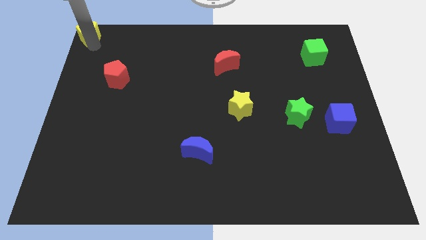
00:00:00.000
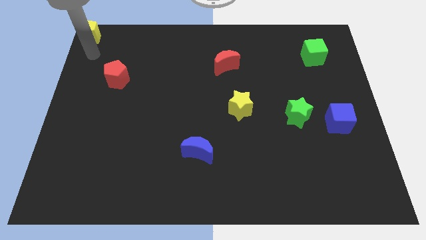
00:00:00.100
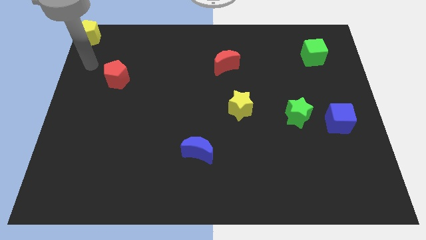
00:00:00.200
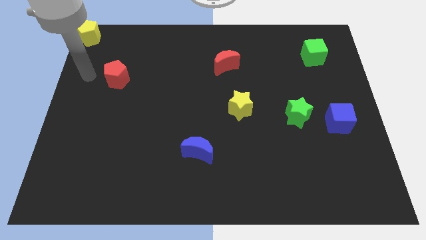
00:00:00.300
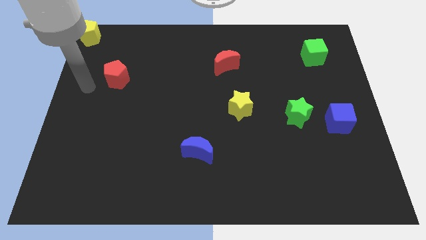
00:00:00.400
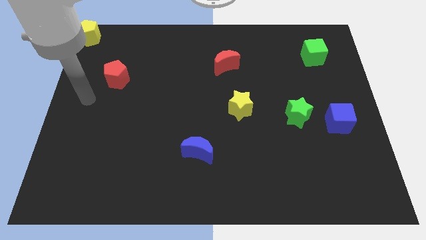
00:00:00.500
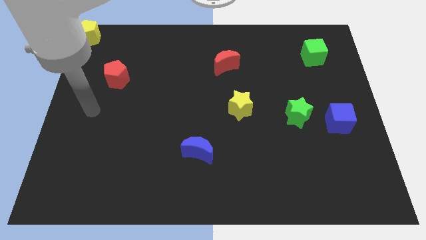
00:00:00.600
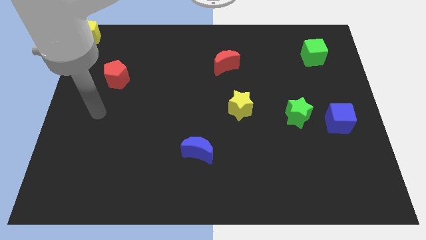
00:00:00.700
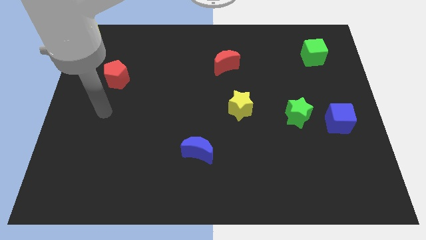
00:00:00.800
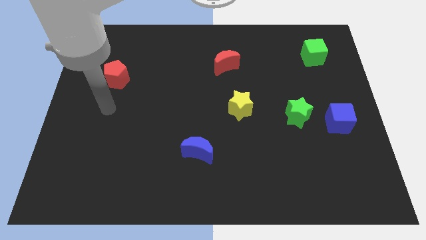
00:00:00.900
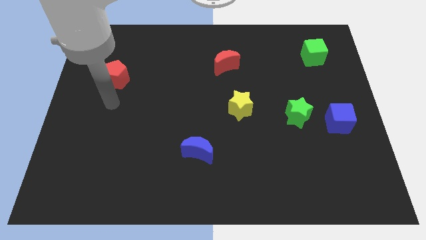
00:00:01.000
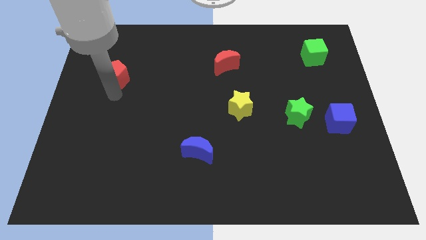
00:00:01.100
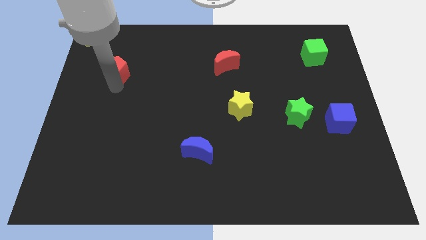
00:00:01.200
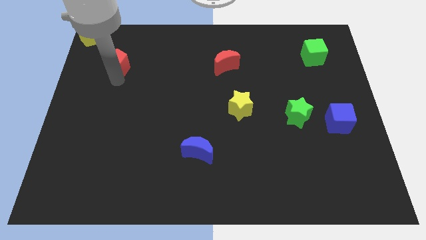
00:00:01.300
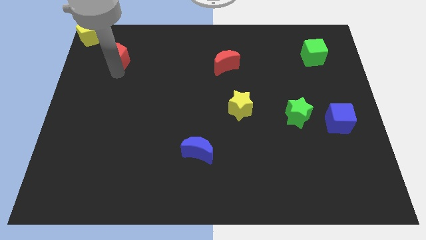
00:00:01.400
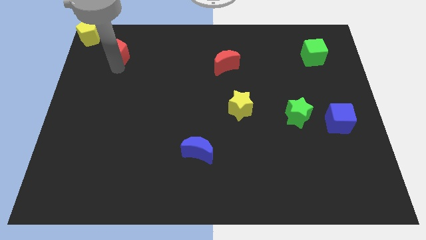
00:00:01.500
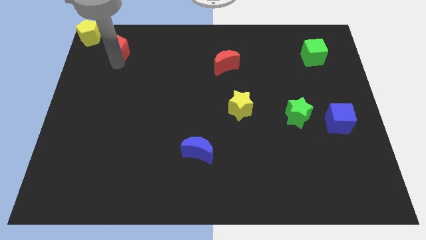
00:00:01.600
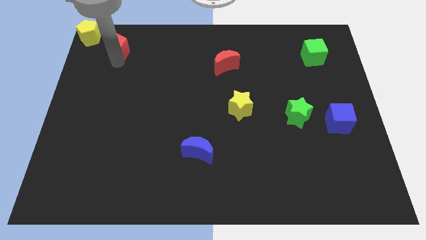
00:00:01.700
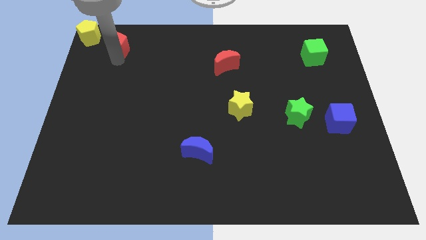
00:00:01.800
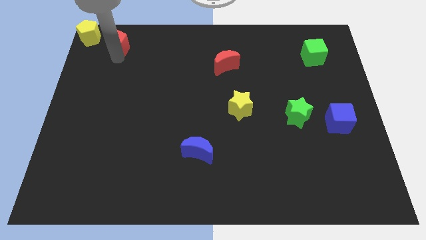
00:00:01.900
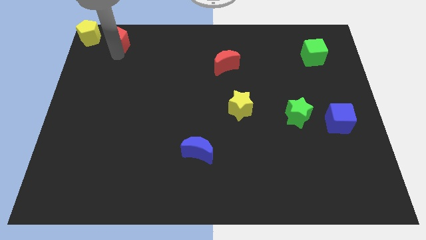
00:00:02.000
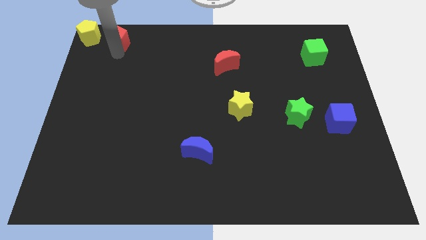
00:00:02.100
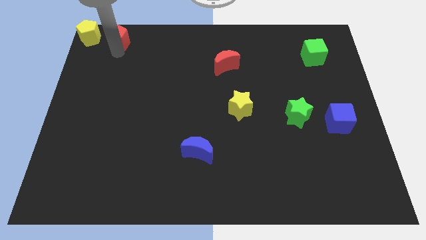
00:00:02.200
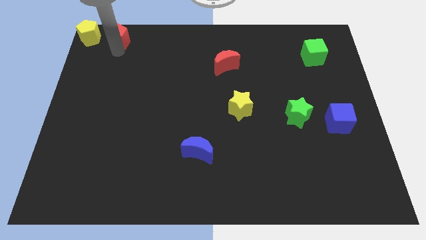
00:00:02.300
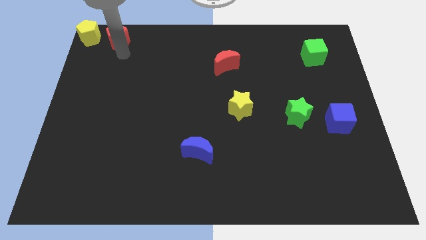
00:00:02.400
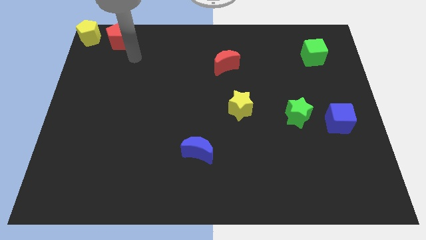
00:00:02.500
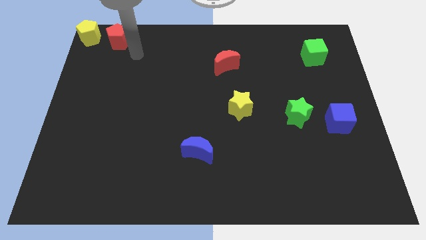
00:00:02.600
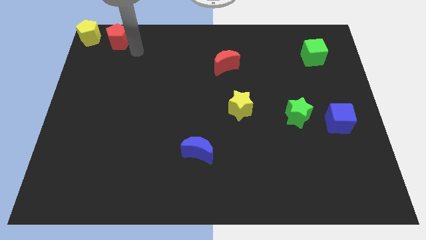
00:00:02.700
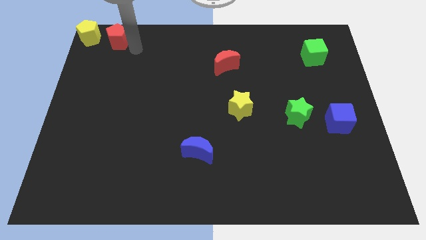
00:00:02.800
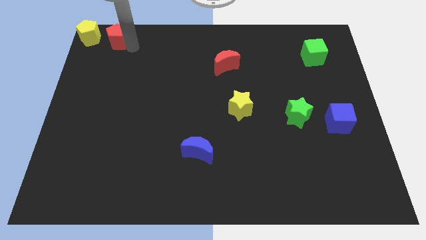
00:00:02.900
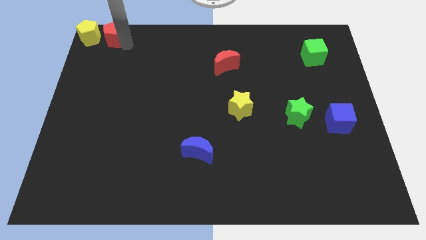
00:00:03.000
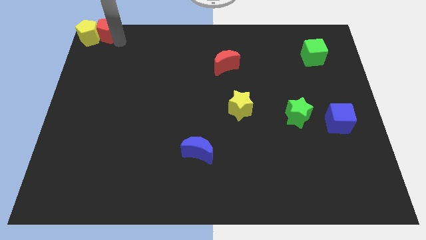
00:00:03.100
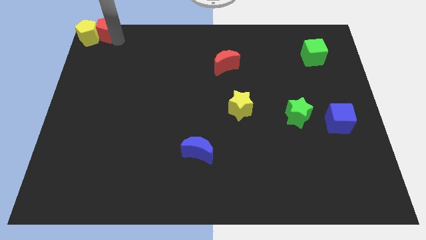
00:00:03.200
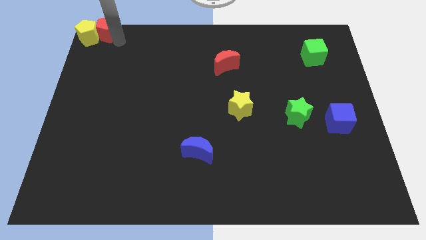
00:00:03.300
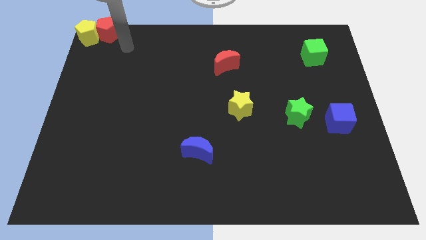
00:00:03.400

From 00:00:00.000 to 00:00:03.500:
push the red pentagon to the right of the yellow pentagon

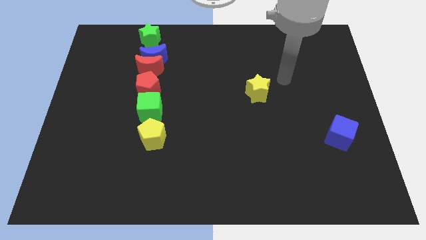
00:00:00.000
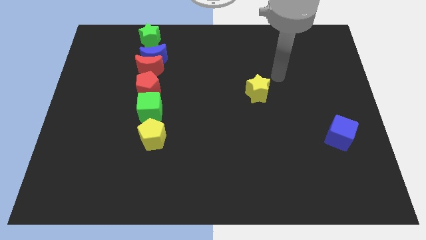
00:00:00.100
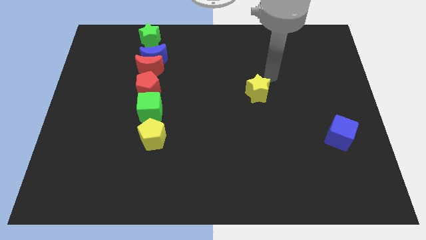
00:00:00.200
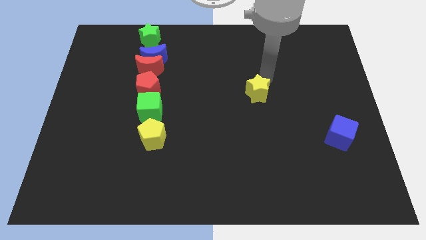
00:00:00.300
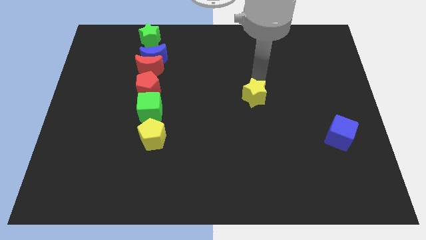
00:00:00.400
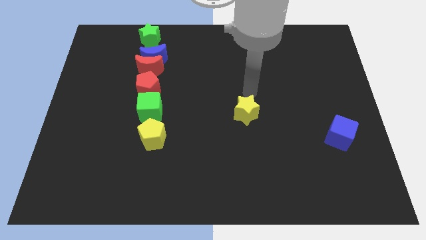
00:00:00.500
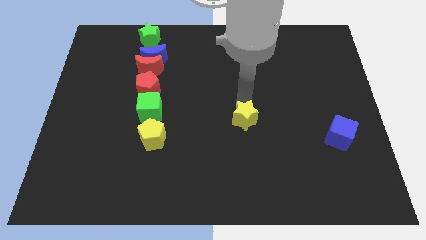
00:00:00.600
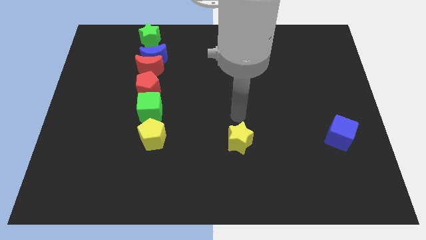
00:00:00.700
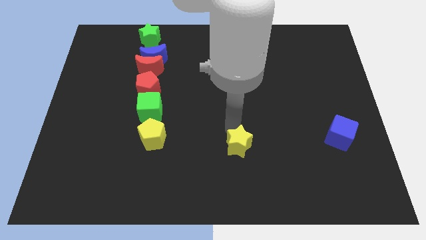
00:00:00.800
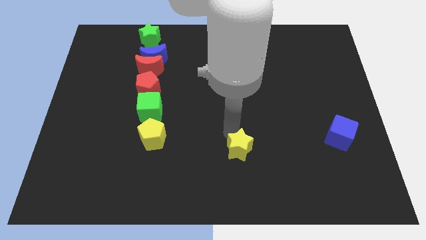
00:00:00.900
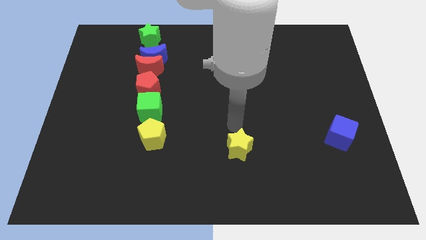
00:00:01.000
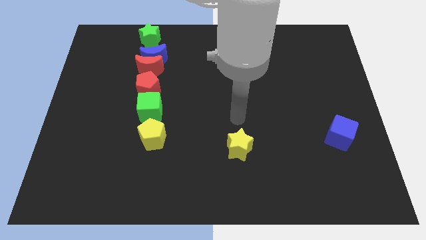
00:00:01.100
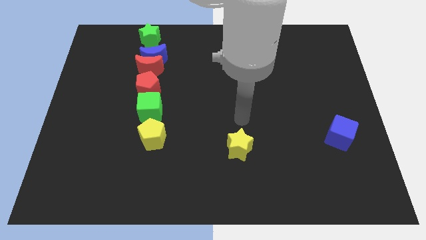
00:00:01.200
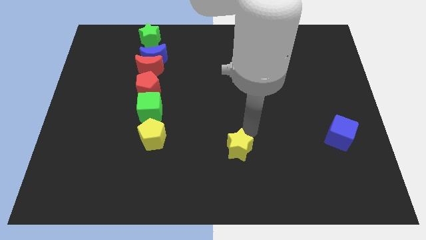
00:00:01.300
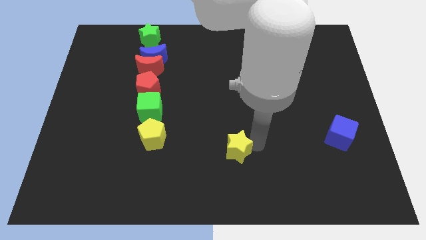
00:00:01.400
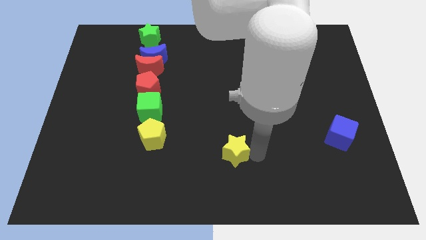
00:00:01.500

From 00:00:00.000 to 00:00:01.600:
push the yellow star towards the bottom of the board

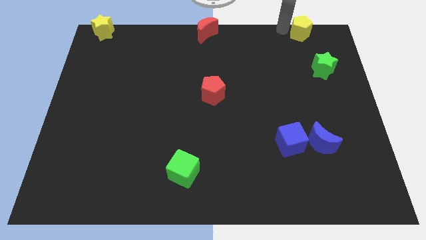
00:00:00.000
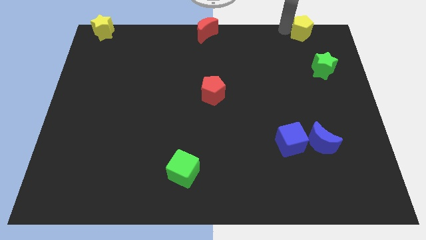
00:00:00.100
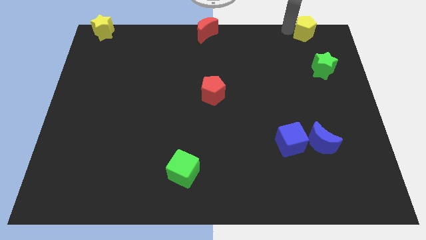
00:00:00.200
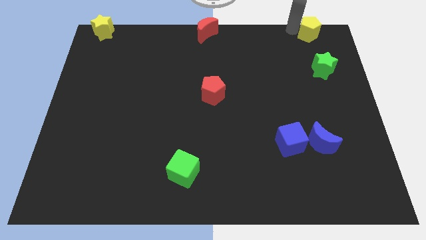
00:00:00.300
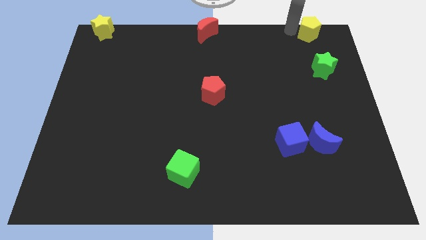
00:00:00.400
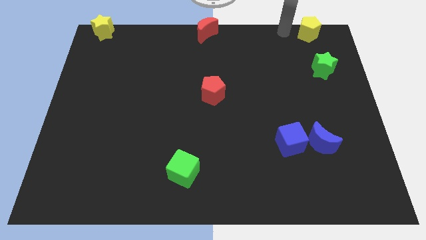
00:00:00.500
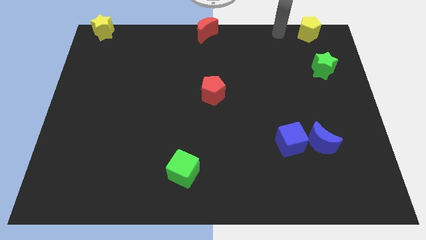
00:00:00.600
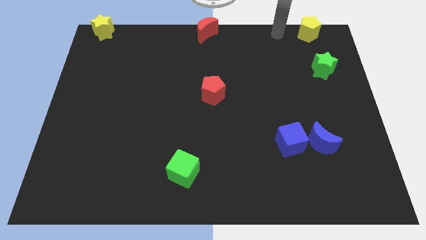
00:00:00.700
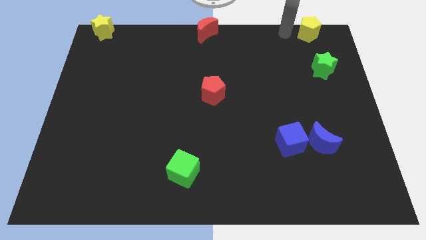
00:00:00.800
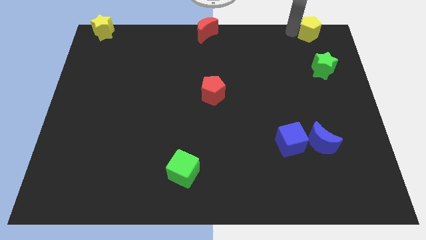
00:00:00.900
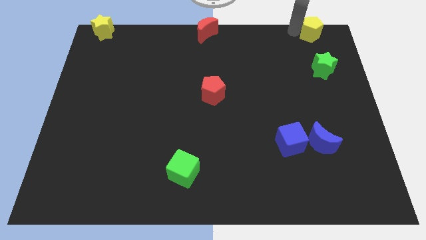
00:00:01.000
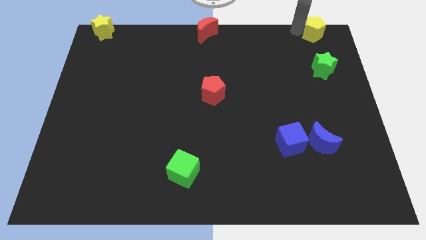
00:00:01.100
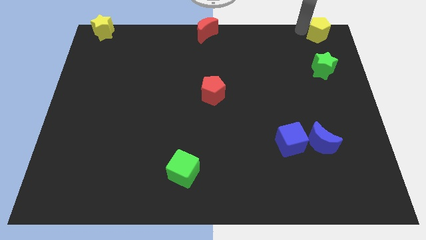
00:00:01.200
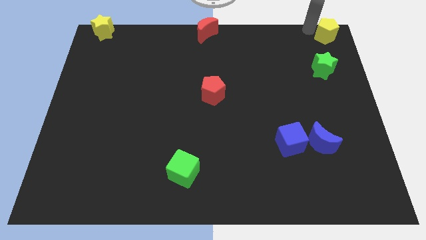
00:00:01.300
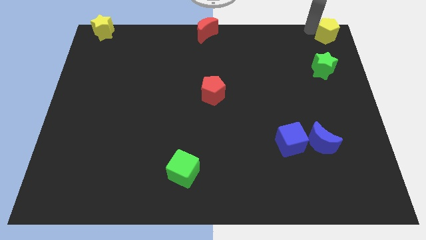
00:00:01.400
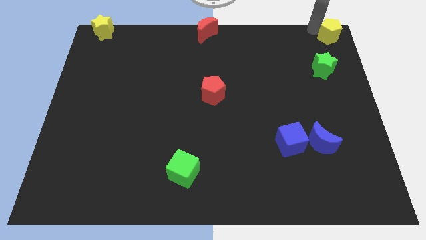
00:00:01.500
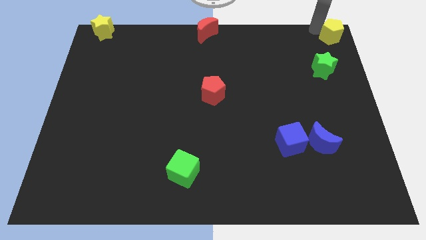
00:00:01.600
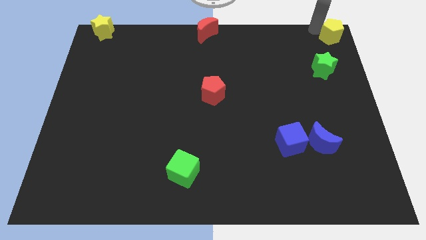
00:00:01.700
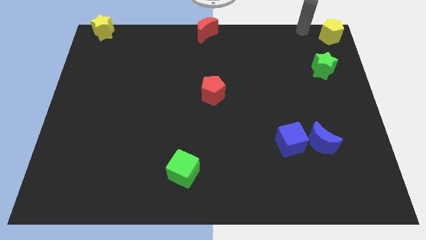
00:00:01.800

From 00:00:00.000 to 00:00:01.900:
push the yellow pentagon to top right corner

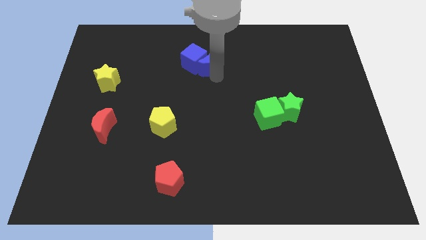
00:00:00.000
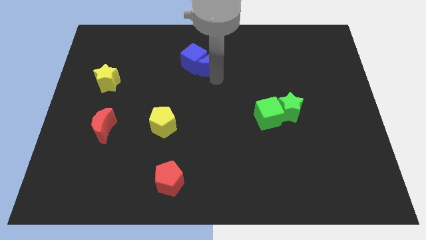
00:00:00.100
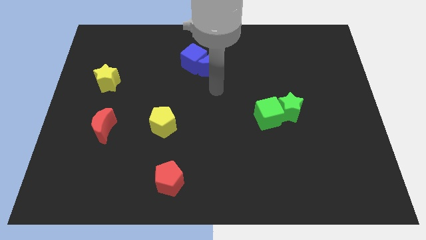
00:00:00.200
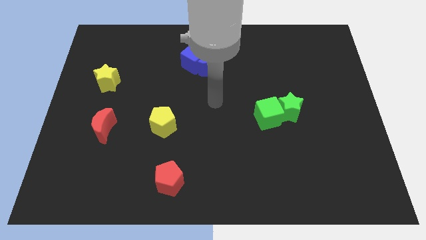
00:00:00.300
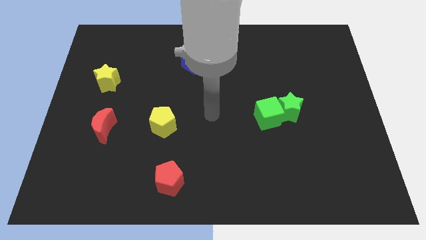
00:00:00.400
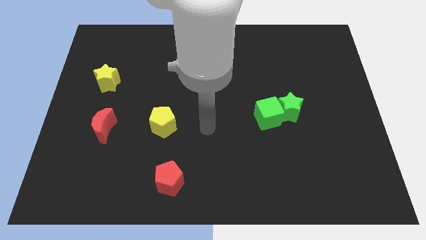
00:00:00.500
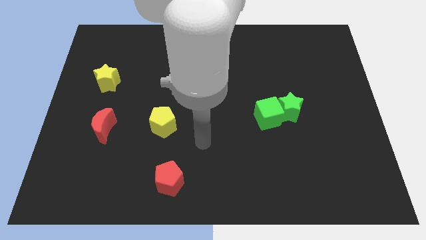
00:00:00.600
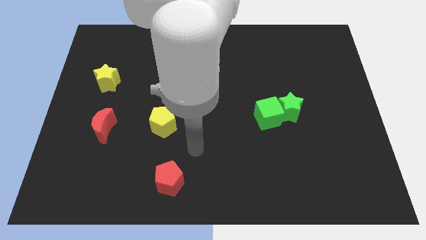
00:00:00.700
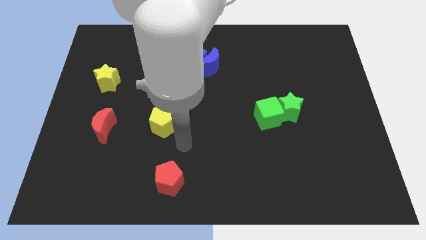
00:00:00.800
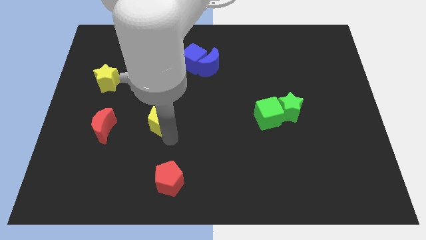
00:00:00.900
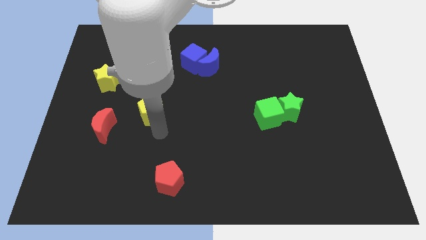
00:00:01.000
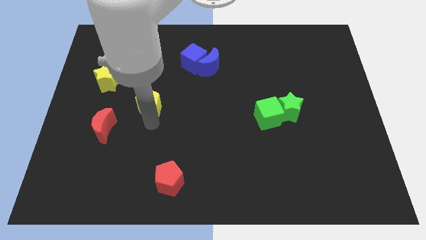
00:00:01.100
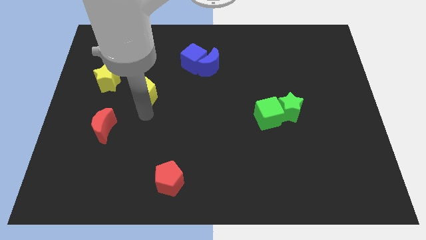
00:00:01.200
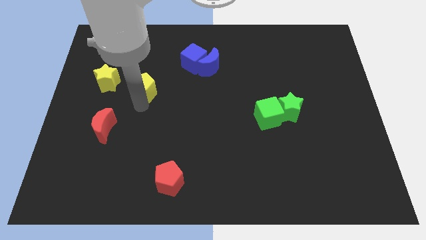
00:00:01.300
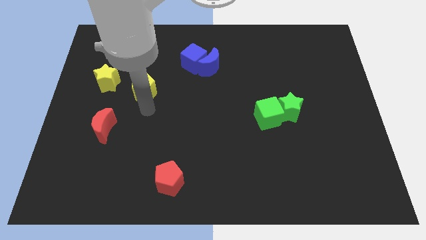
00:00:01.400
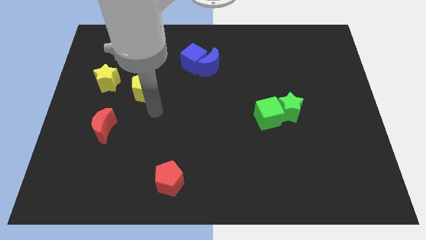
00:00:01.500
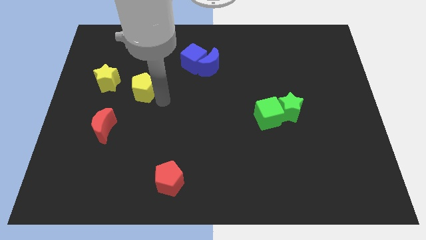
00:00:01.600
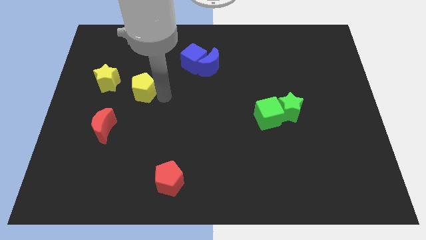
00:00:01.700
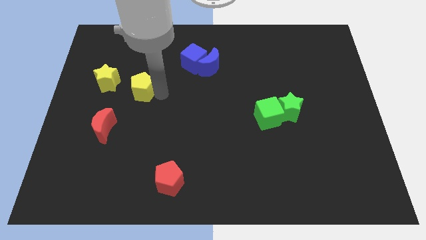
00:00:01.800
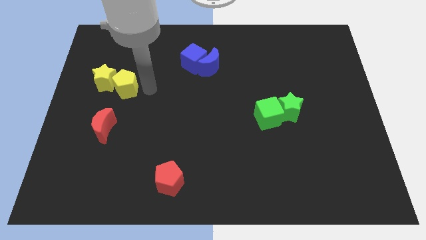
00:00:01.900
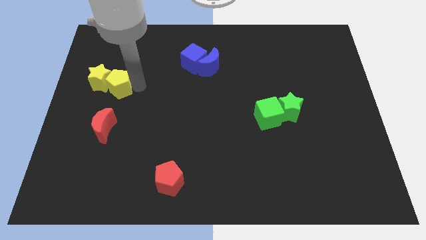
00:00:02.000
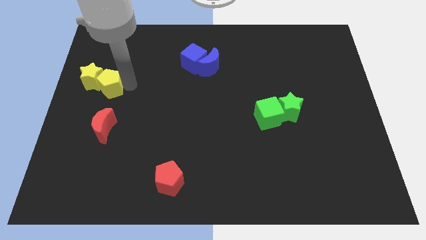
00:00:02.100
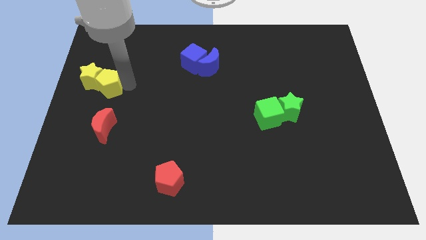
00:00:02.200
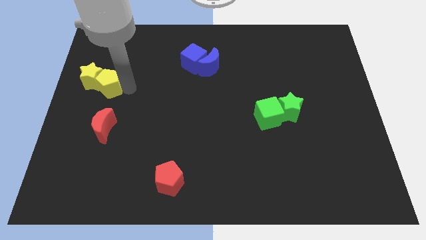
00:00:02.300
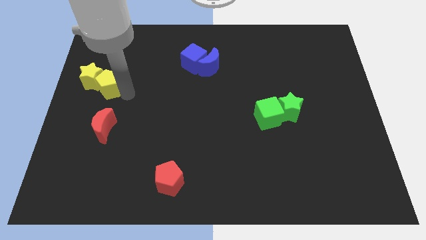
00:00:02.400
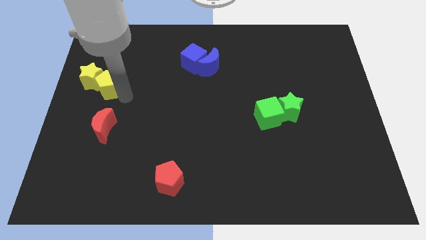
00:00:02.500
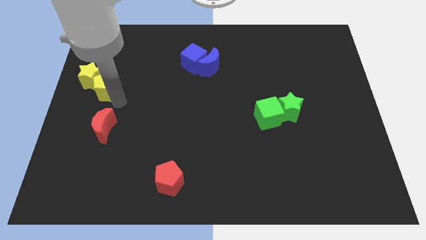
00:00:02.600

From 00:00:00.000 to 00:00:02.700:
push the yellow pentagon into the yellow star
